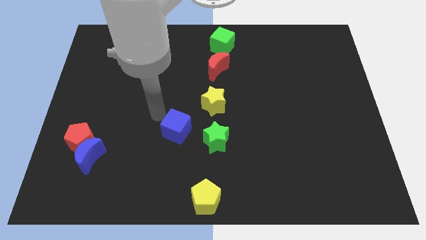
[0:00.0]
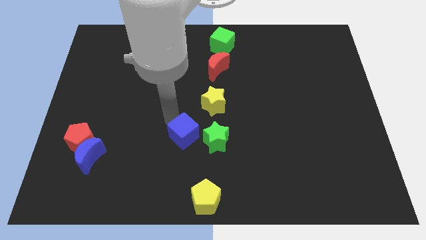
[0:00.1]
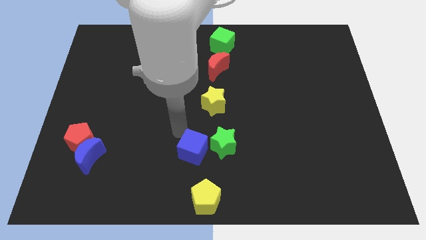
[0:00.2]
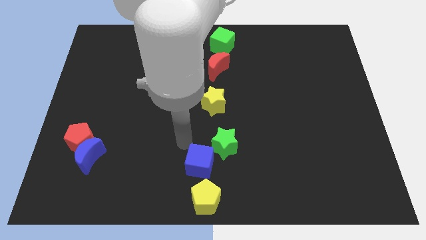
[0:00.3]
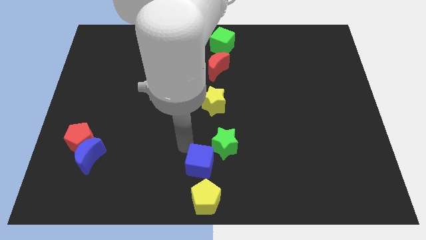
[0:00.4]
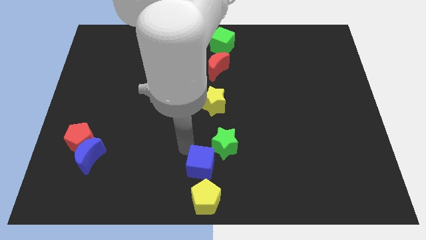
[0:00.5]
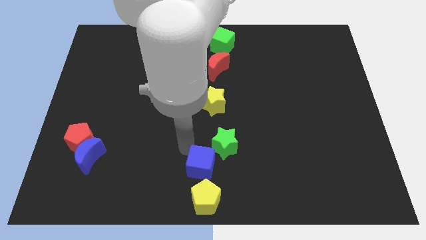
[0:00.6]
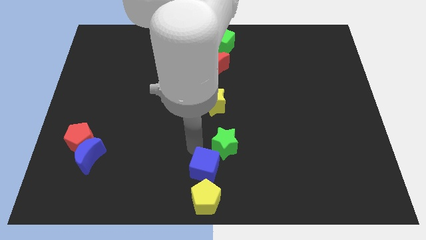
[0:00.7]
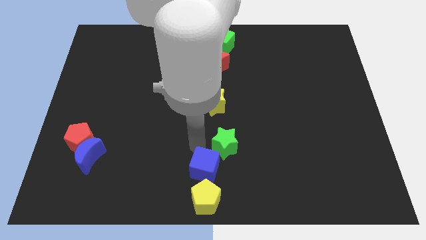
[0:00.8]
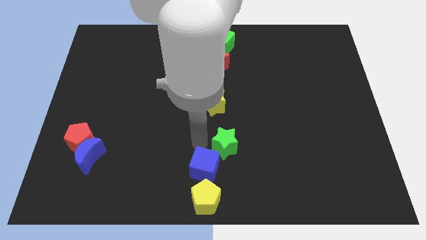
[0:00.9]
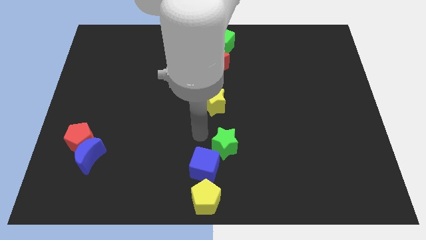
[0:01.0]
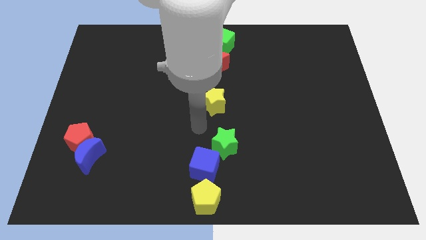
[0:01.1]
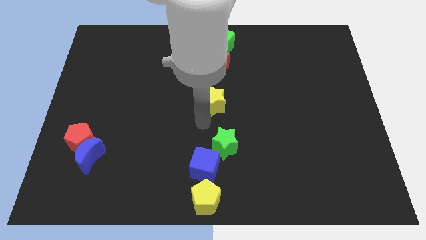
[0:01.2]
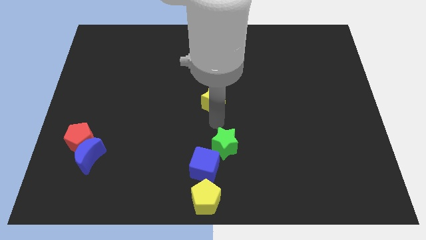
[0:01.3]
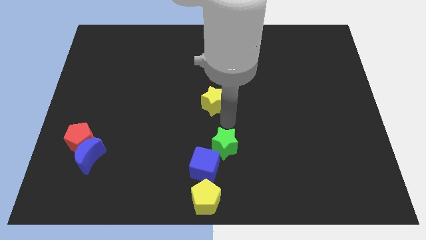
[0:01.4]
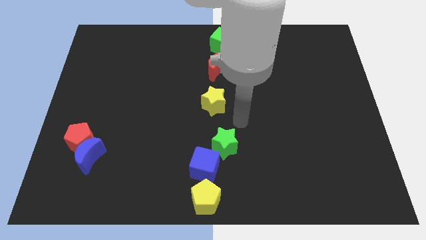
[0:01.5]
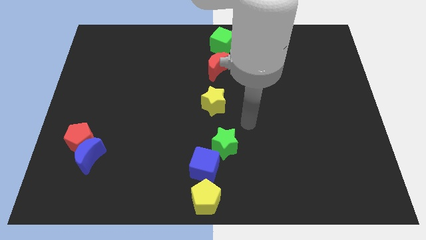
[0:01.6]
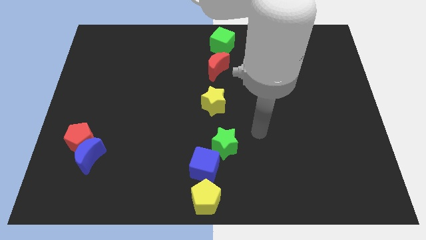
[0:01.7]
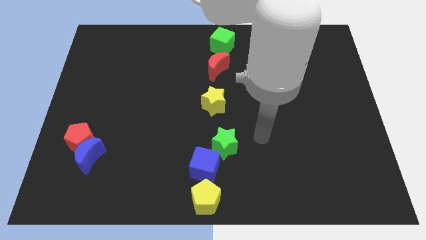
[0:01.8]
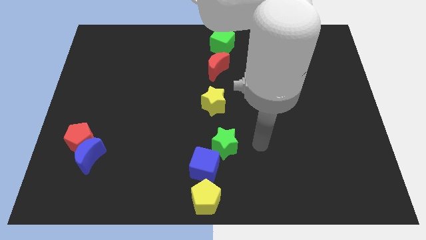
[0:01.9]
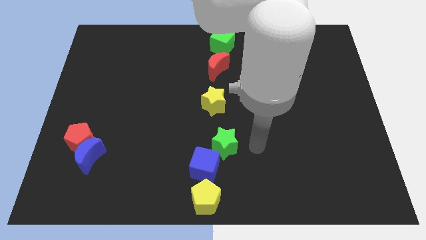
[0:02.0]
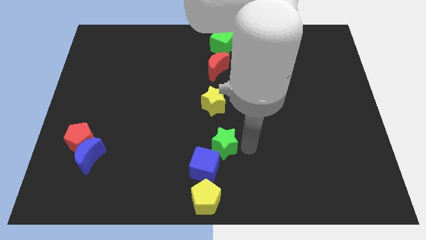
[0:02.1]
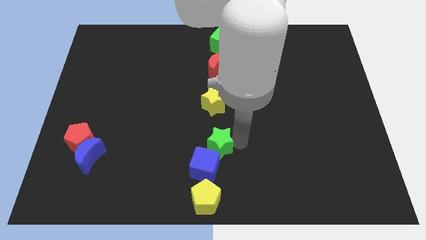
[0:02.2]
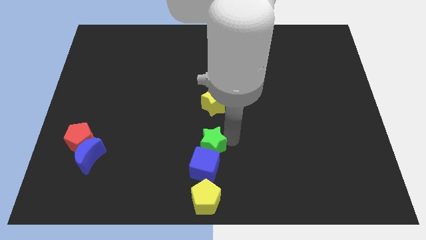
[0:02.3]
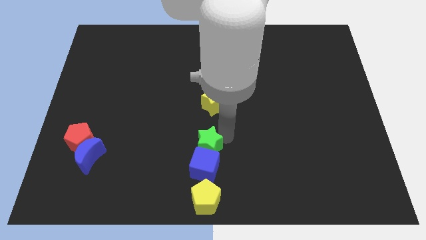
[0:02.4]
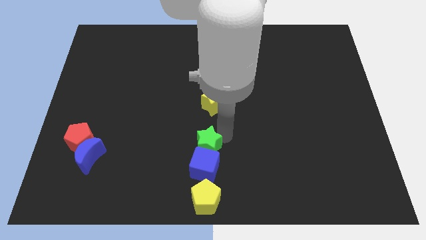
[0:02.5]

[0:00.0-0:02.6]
place green star above blue cube

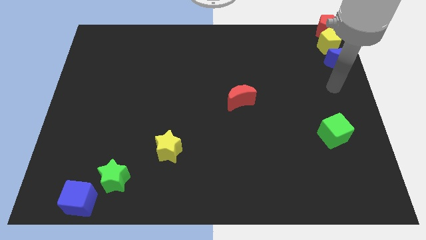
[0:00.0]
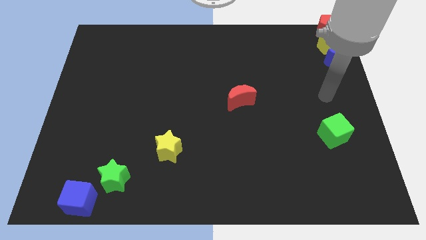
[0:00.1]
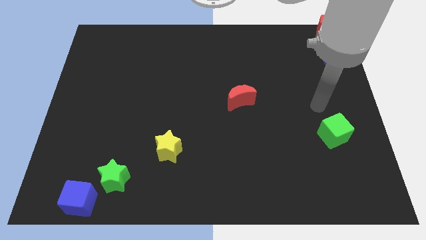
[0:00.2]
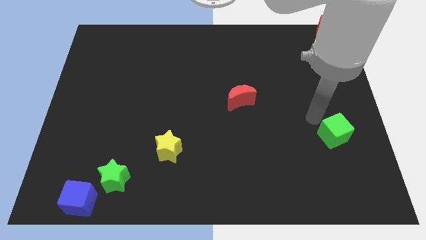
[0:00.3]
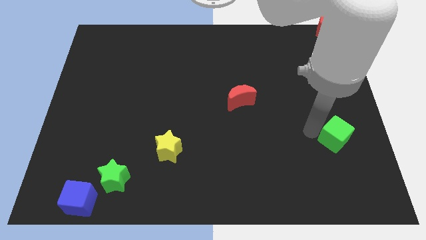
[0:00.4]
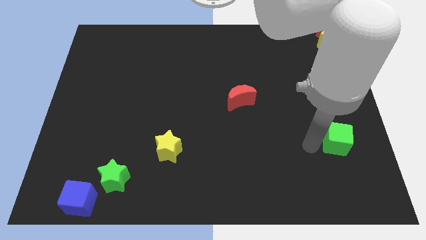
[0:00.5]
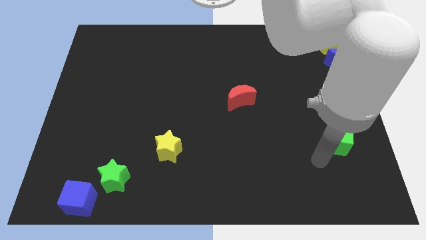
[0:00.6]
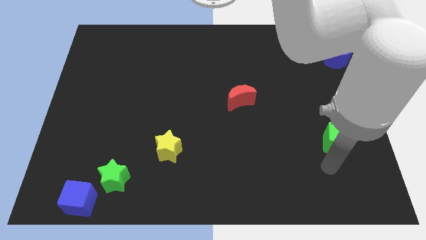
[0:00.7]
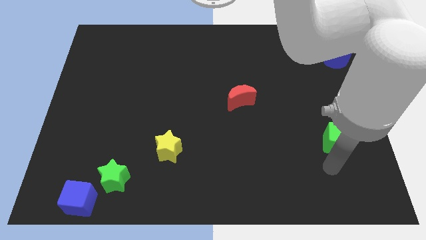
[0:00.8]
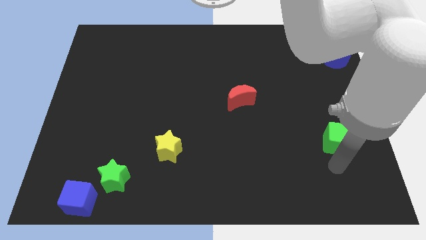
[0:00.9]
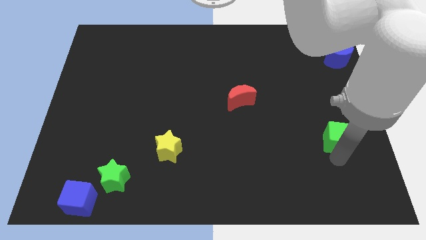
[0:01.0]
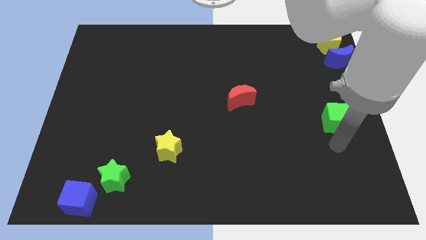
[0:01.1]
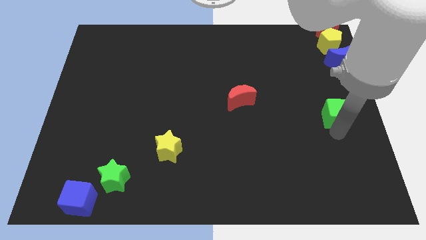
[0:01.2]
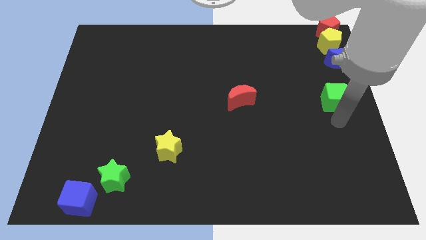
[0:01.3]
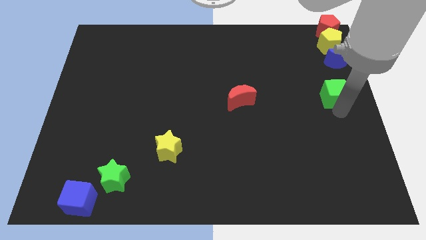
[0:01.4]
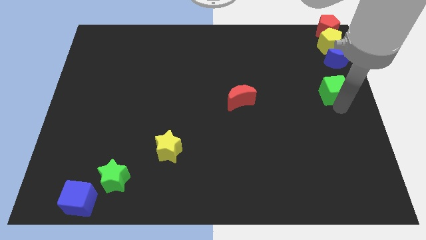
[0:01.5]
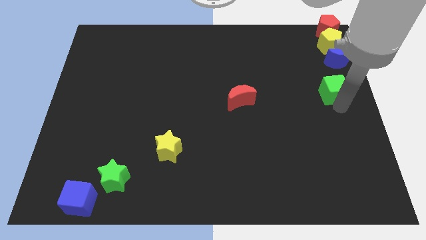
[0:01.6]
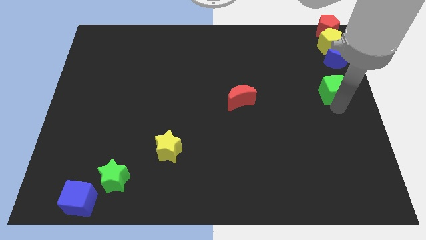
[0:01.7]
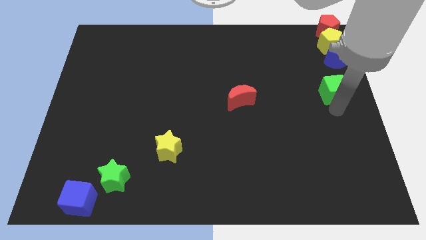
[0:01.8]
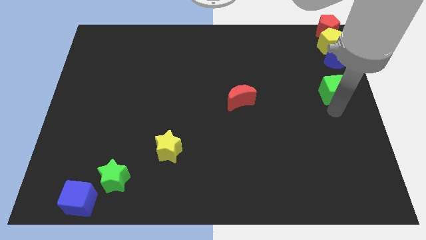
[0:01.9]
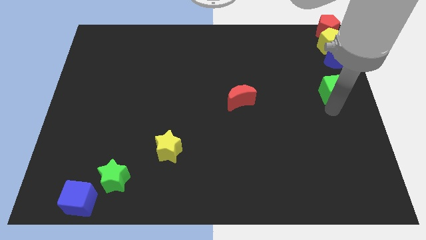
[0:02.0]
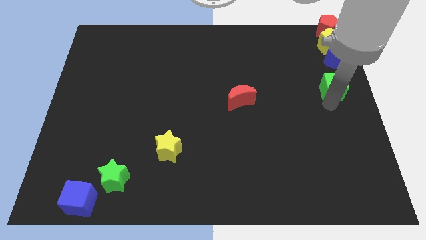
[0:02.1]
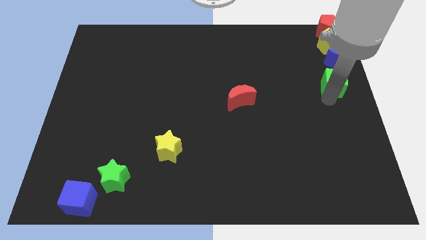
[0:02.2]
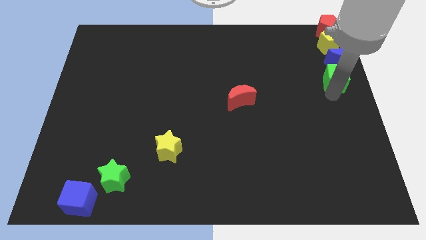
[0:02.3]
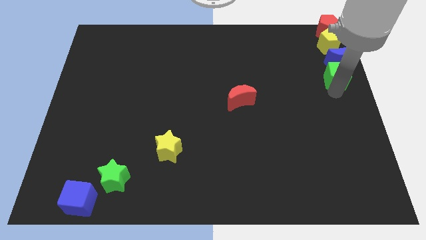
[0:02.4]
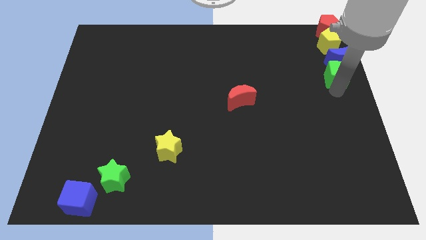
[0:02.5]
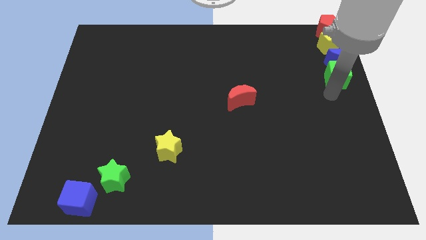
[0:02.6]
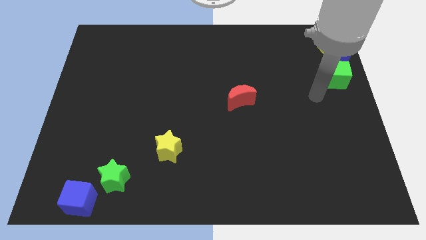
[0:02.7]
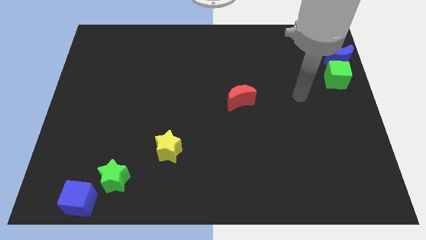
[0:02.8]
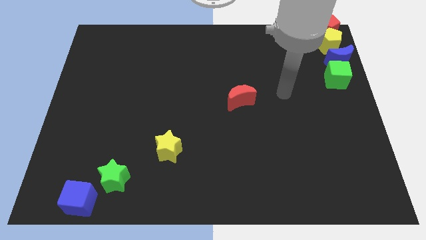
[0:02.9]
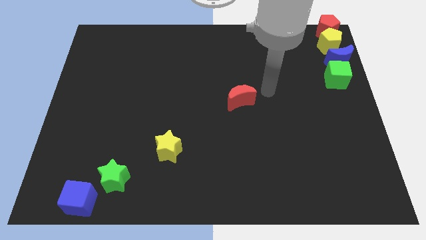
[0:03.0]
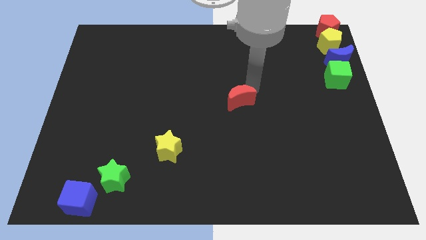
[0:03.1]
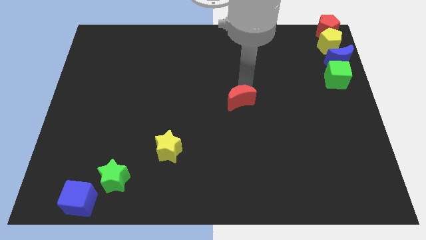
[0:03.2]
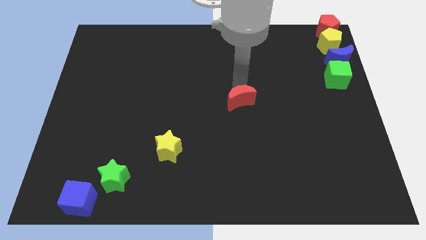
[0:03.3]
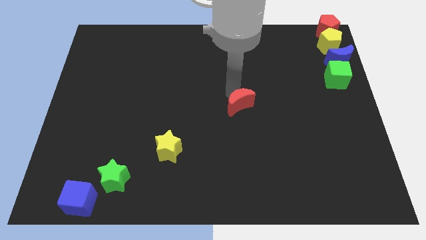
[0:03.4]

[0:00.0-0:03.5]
pull the green cube below the blue crescent

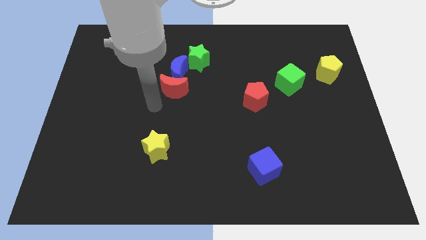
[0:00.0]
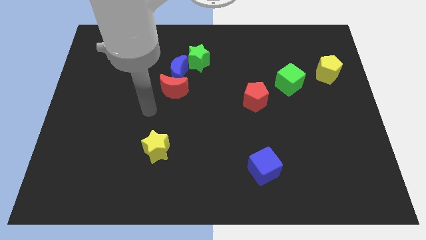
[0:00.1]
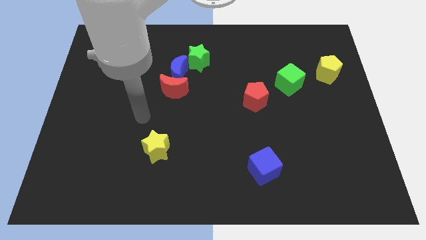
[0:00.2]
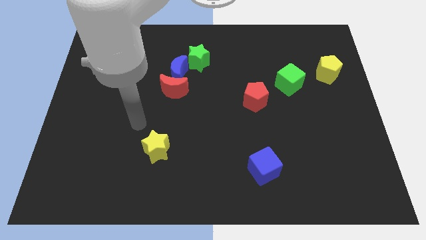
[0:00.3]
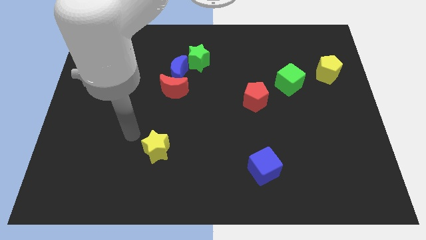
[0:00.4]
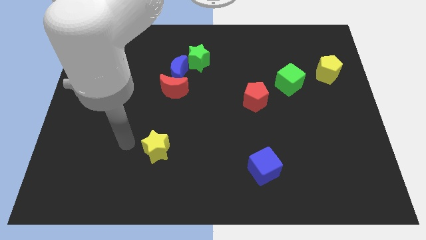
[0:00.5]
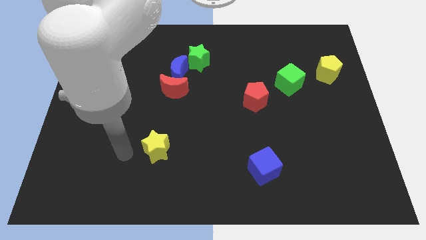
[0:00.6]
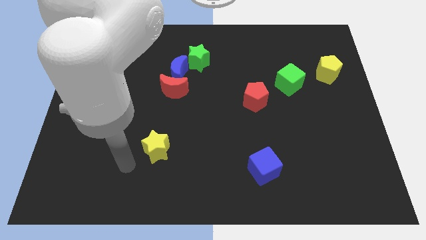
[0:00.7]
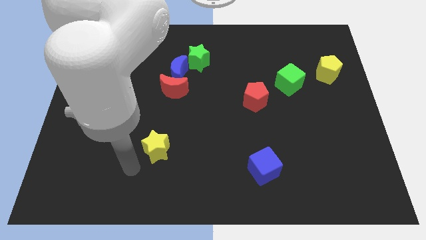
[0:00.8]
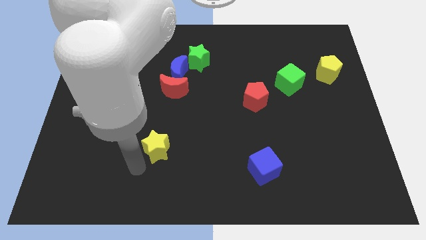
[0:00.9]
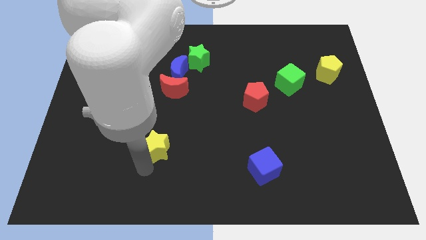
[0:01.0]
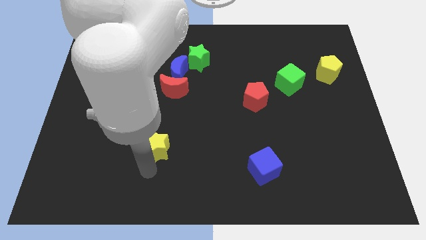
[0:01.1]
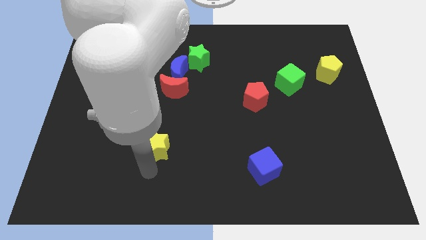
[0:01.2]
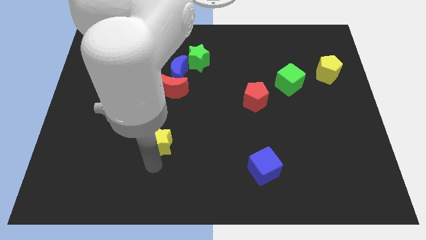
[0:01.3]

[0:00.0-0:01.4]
move your hand at the bottom of the yellow star

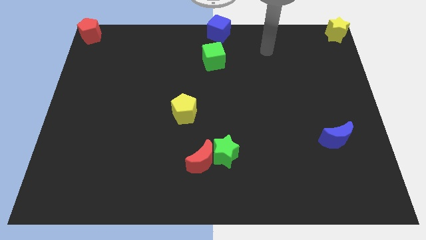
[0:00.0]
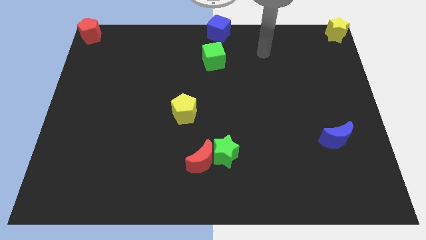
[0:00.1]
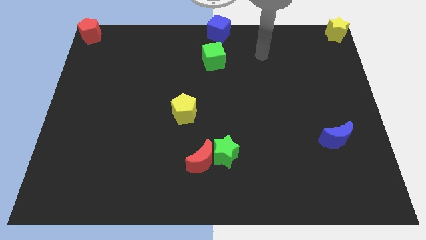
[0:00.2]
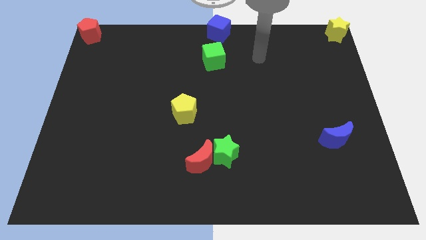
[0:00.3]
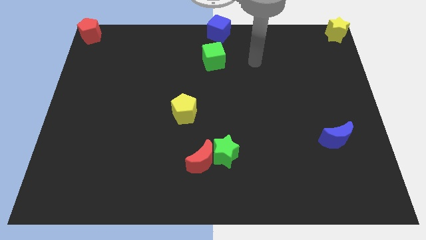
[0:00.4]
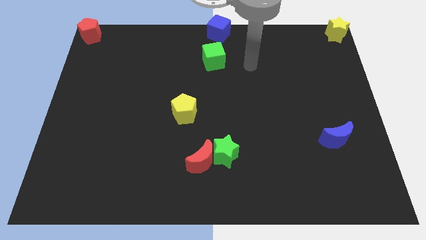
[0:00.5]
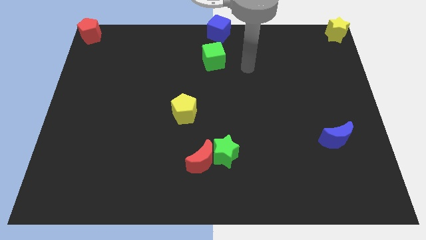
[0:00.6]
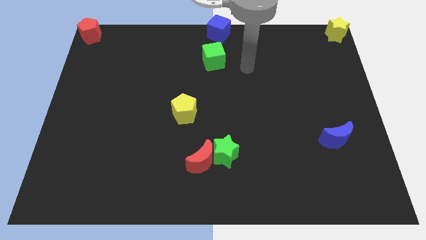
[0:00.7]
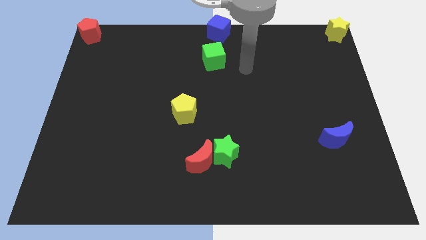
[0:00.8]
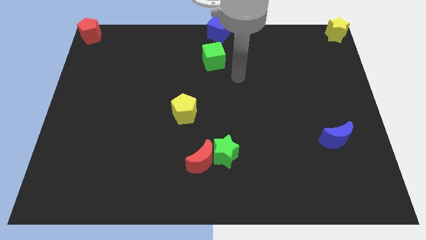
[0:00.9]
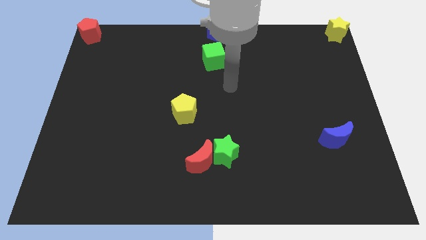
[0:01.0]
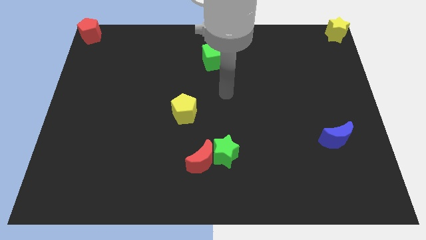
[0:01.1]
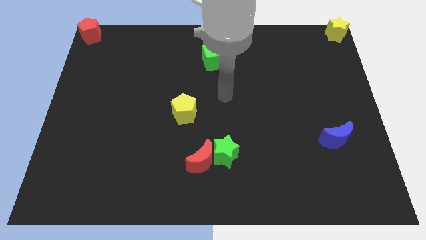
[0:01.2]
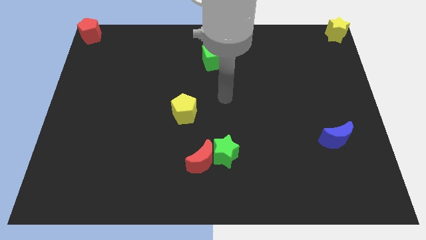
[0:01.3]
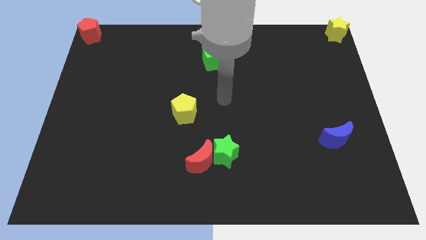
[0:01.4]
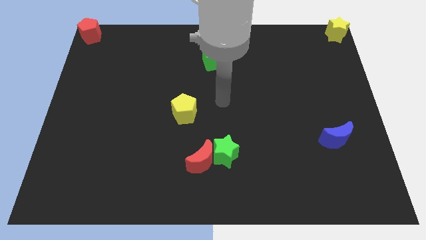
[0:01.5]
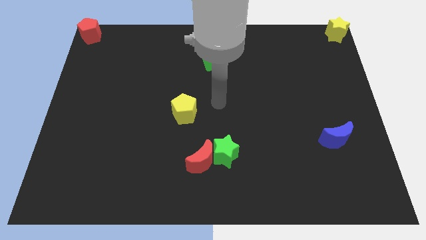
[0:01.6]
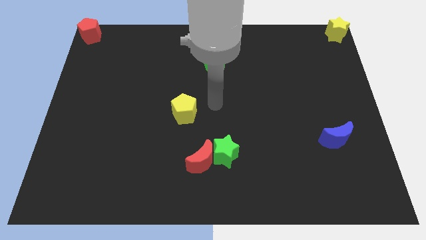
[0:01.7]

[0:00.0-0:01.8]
place the arm in between green cube and green star
